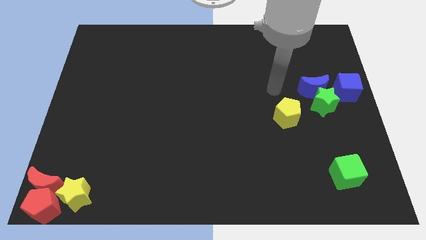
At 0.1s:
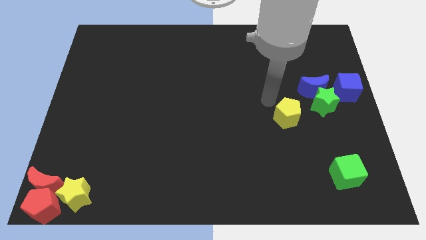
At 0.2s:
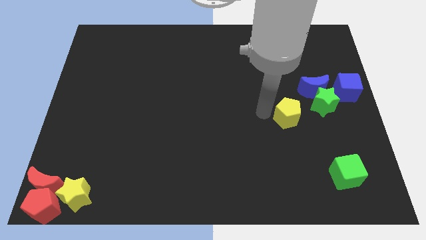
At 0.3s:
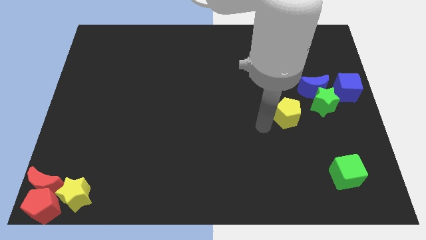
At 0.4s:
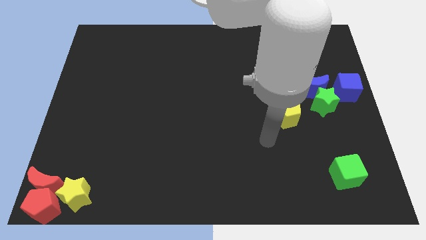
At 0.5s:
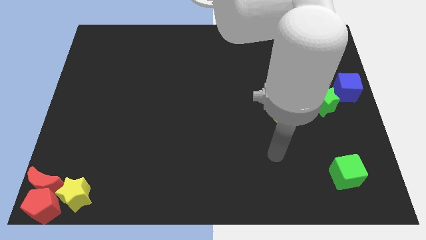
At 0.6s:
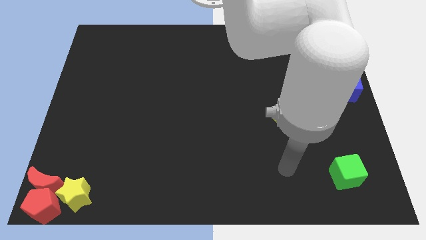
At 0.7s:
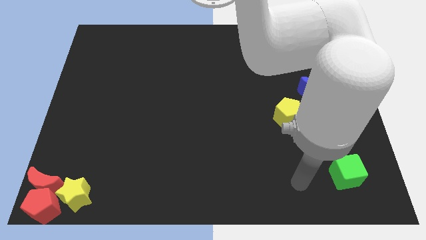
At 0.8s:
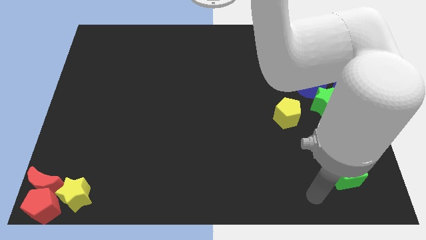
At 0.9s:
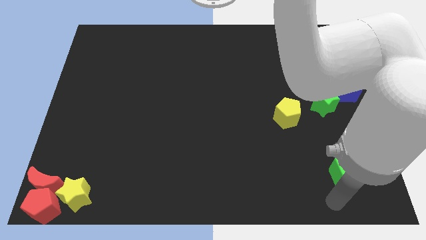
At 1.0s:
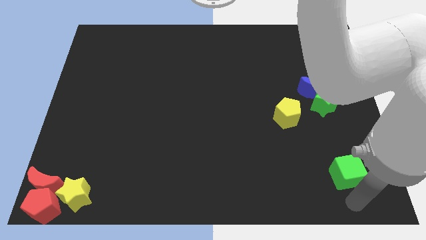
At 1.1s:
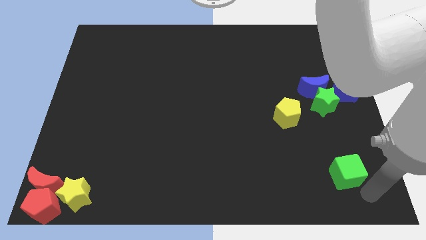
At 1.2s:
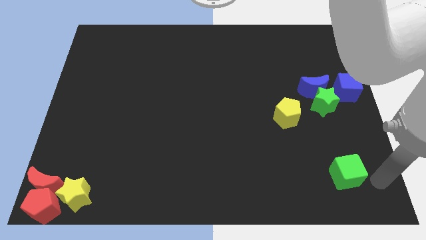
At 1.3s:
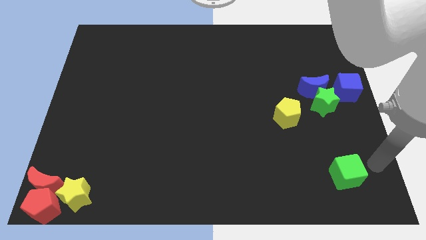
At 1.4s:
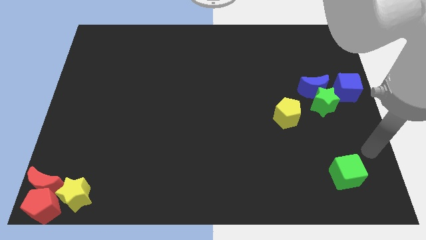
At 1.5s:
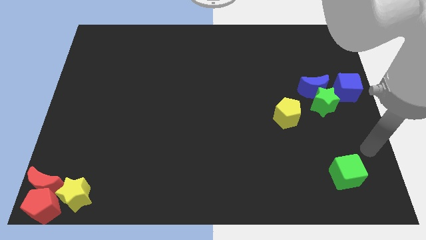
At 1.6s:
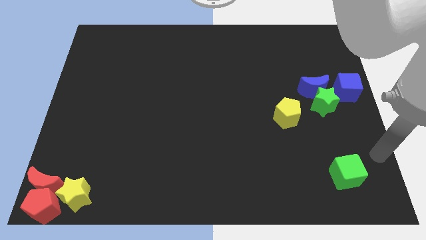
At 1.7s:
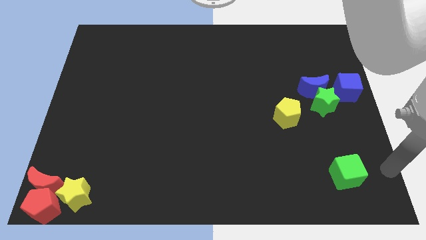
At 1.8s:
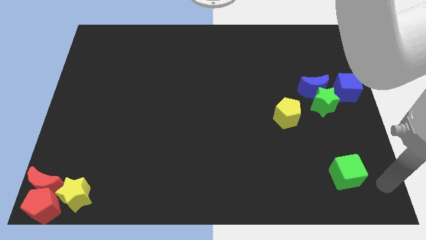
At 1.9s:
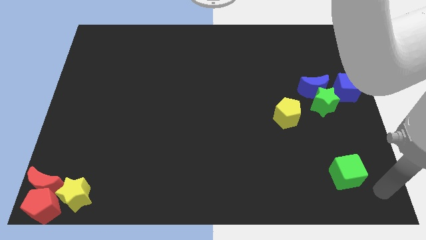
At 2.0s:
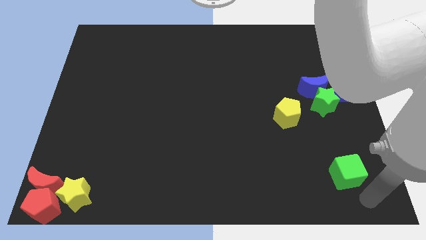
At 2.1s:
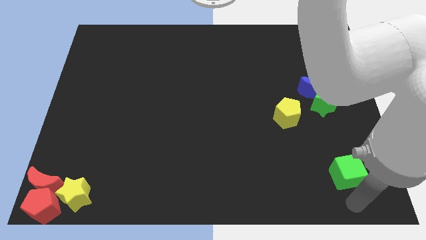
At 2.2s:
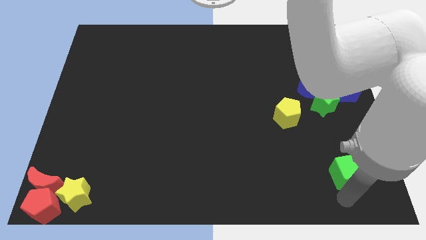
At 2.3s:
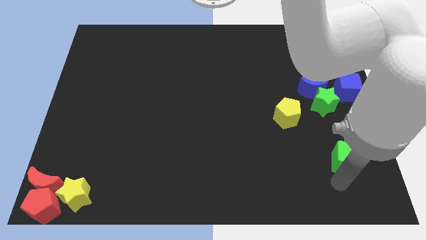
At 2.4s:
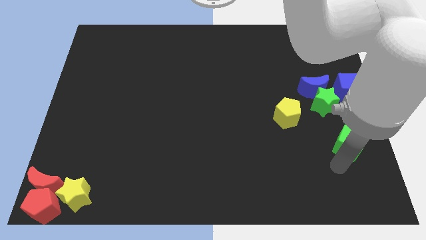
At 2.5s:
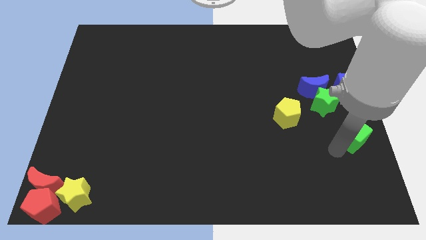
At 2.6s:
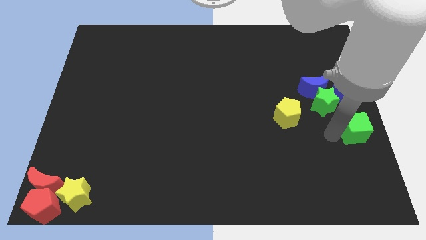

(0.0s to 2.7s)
place green cube below blue cube

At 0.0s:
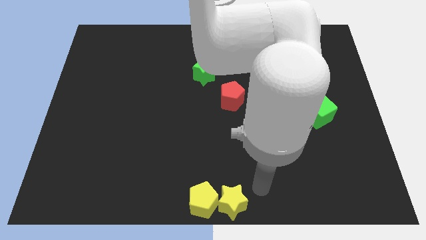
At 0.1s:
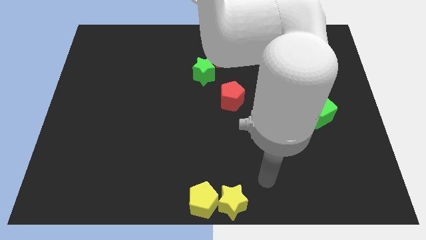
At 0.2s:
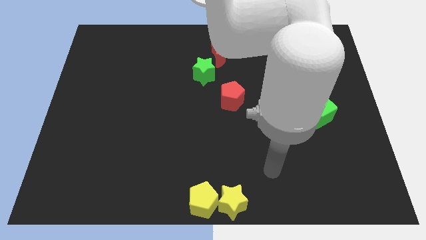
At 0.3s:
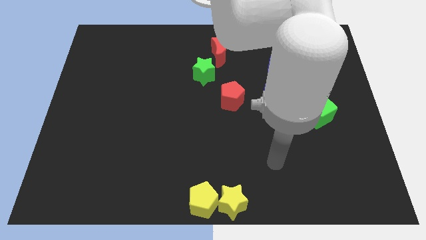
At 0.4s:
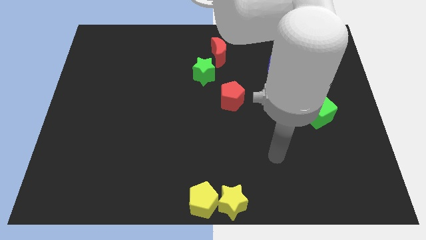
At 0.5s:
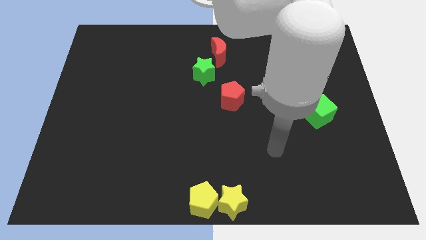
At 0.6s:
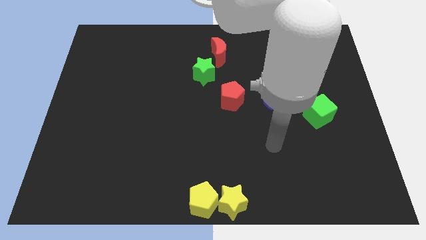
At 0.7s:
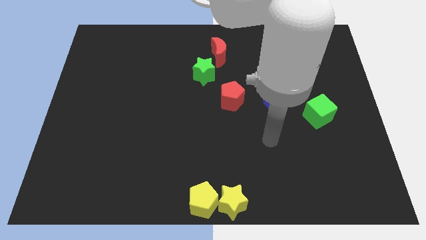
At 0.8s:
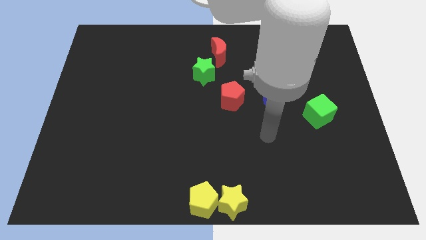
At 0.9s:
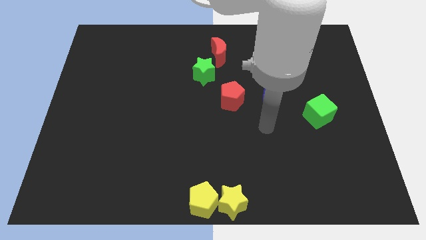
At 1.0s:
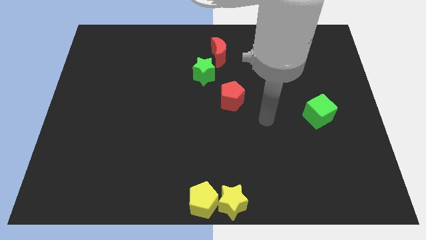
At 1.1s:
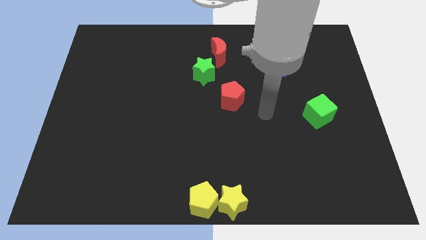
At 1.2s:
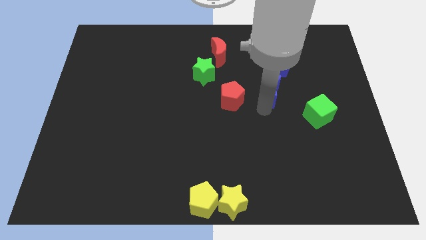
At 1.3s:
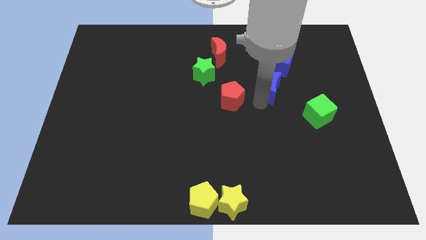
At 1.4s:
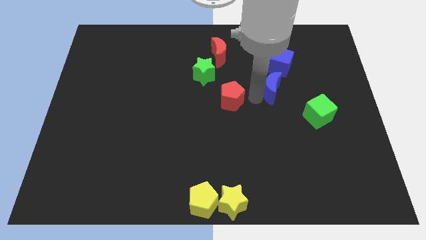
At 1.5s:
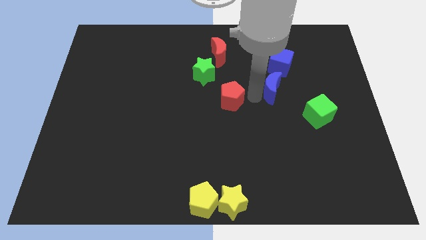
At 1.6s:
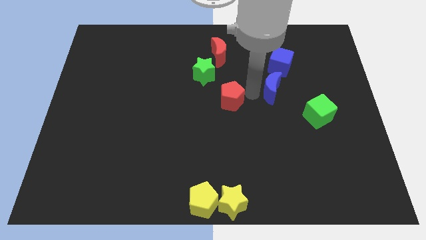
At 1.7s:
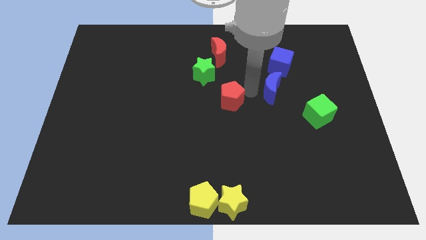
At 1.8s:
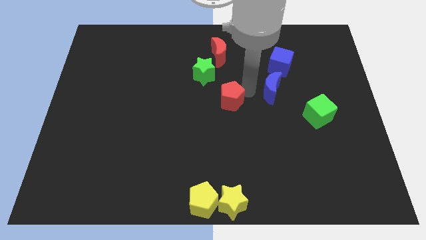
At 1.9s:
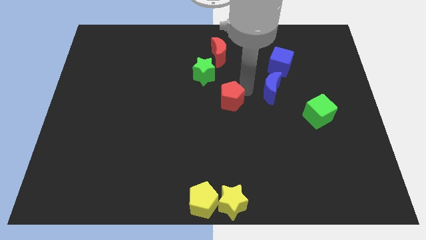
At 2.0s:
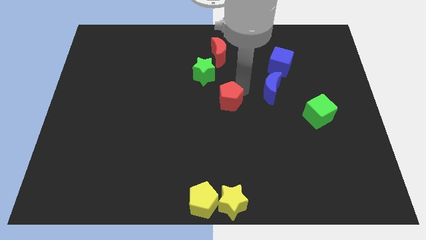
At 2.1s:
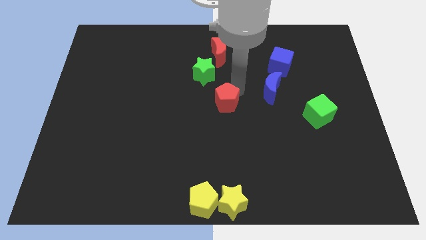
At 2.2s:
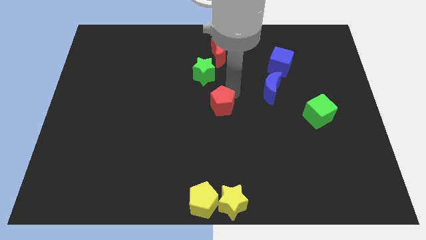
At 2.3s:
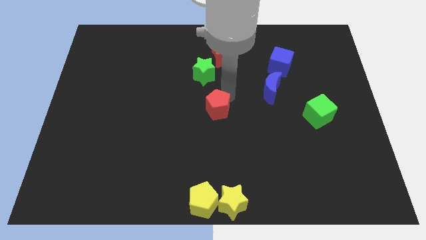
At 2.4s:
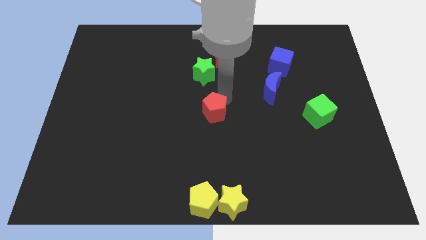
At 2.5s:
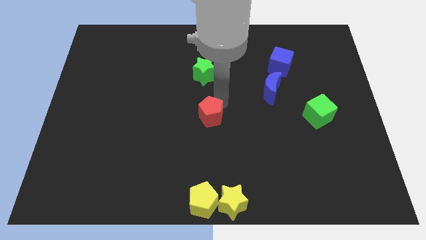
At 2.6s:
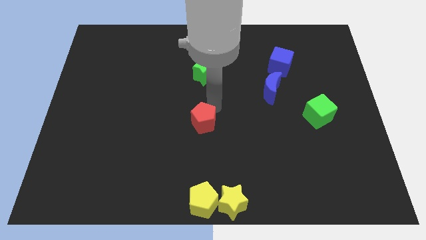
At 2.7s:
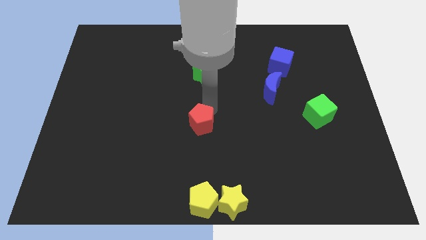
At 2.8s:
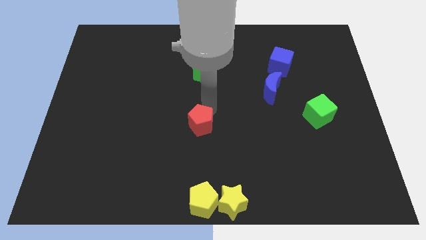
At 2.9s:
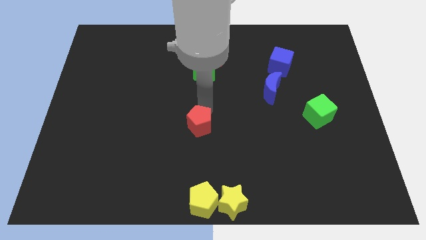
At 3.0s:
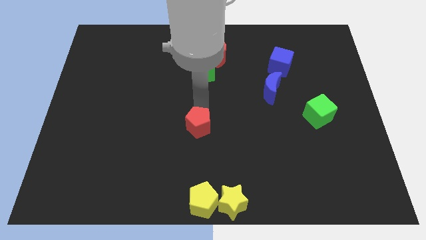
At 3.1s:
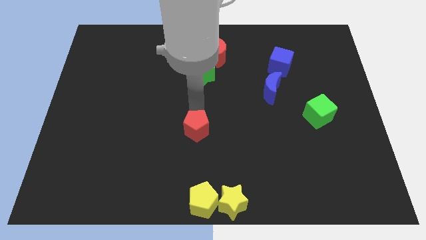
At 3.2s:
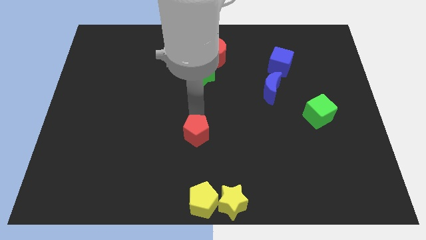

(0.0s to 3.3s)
move the red pentagon to the bottom left of the blue crescent

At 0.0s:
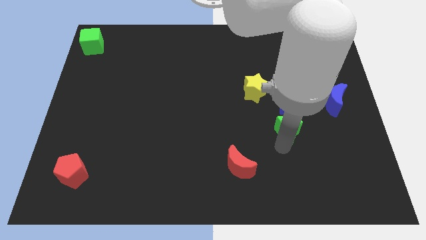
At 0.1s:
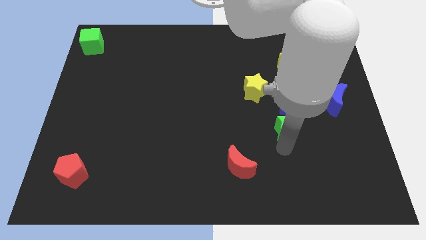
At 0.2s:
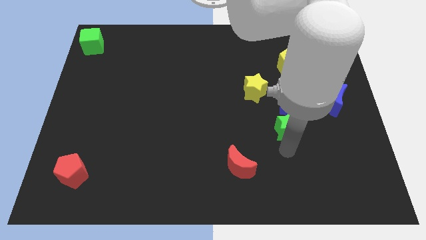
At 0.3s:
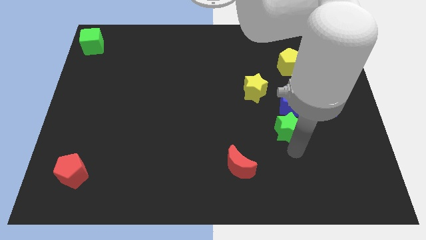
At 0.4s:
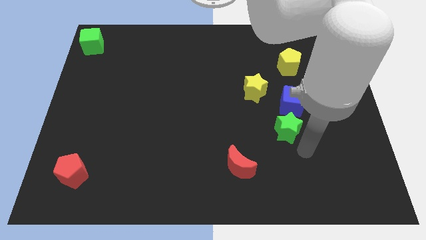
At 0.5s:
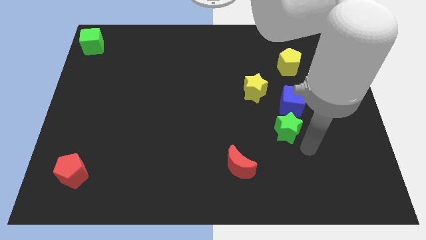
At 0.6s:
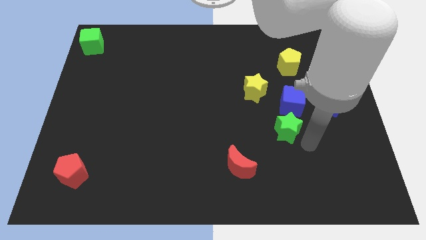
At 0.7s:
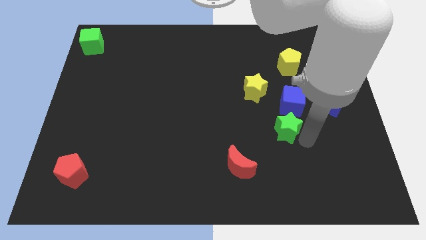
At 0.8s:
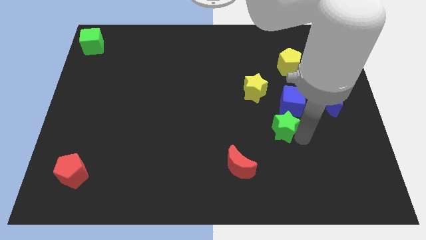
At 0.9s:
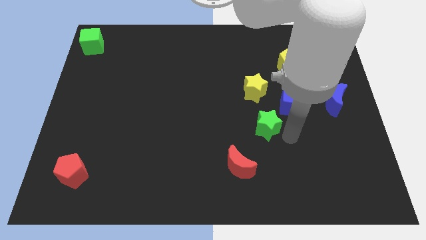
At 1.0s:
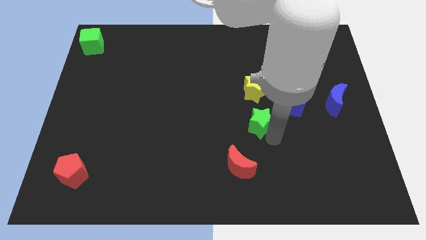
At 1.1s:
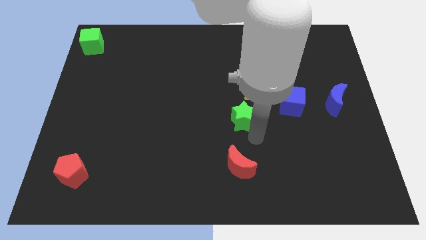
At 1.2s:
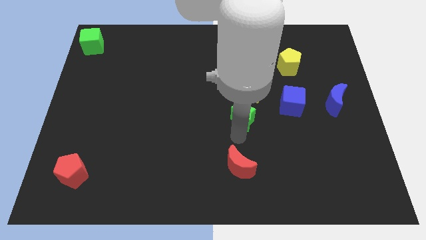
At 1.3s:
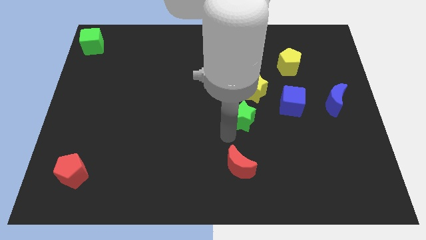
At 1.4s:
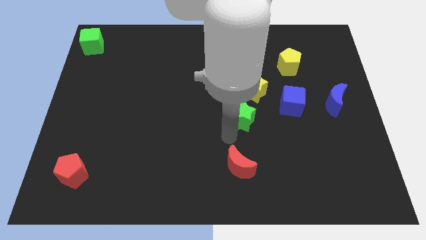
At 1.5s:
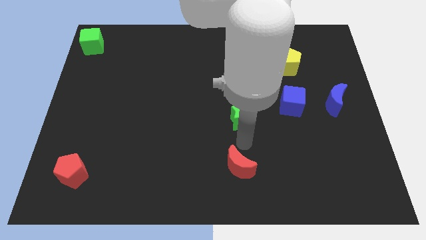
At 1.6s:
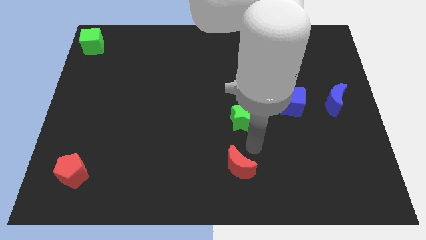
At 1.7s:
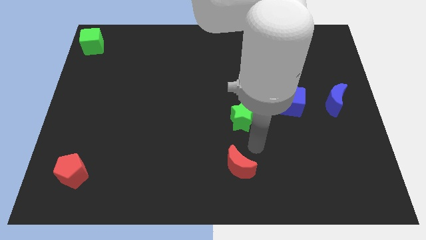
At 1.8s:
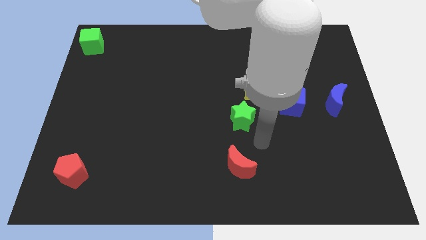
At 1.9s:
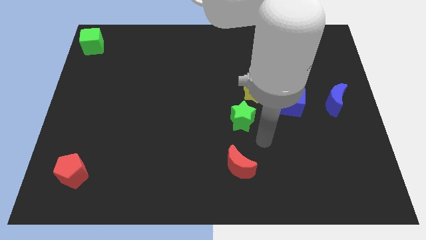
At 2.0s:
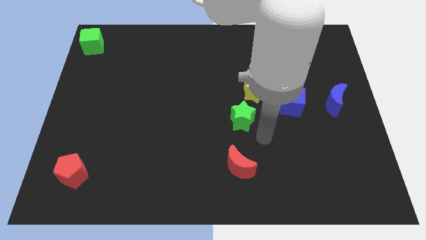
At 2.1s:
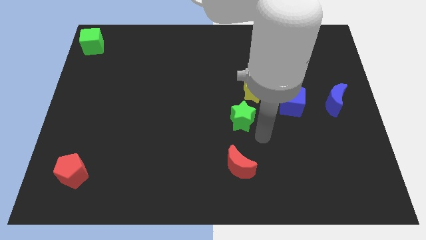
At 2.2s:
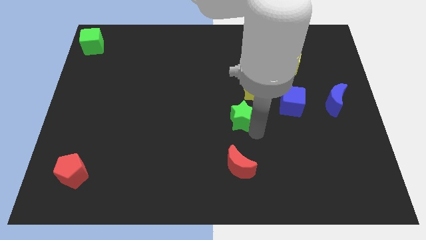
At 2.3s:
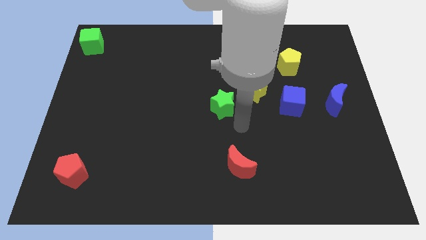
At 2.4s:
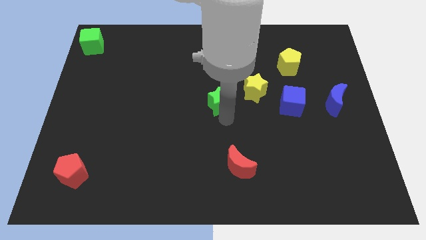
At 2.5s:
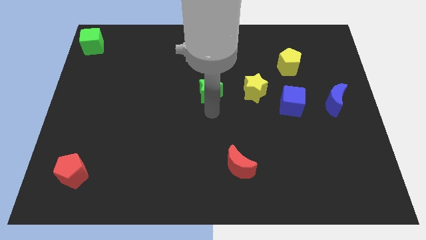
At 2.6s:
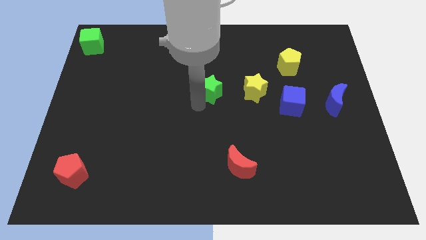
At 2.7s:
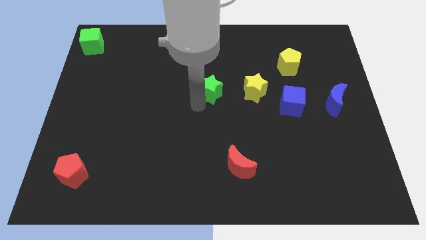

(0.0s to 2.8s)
move the green star to the left of the yellow star

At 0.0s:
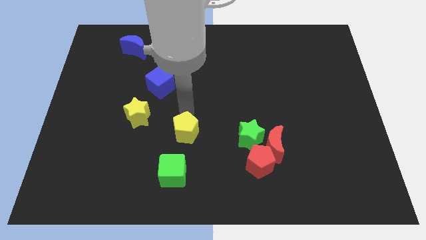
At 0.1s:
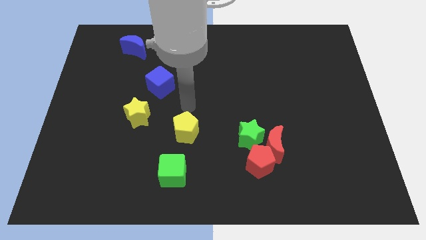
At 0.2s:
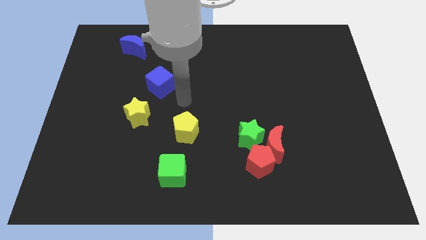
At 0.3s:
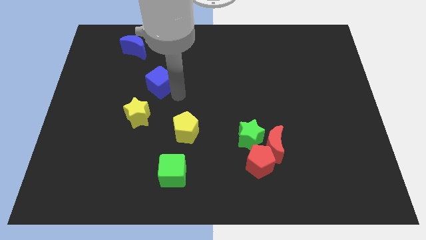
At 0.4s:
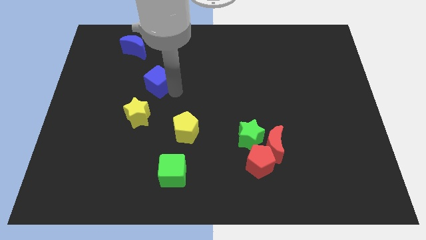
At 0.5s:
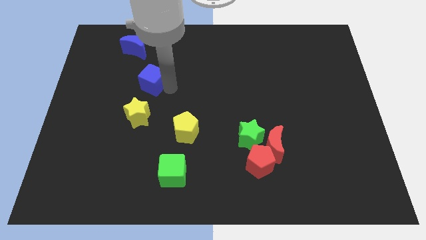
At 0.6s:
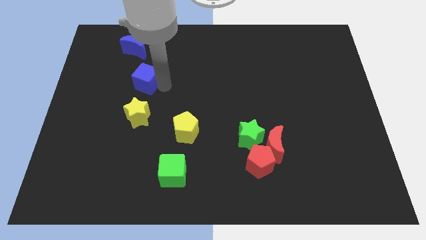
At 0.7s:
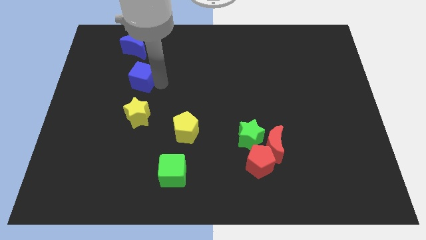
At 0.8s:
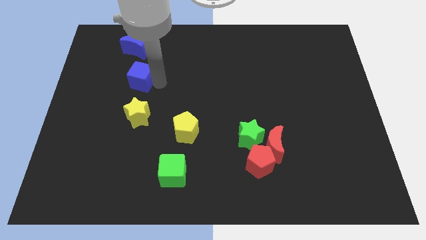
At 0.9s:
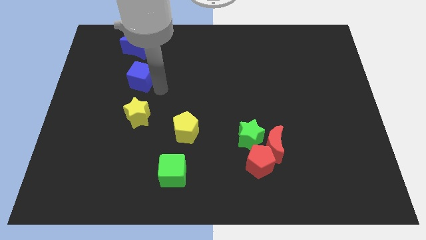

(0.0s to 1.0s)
place the blue cube in between the yellow star and blue crescent
